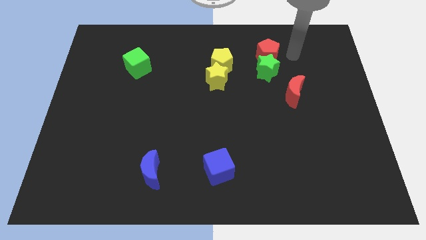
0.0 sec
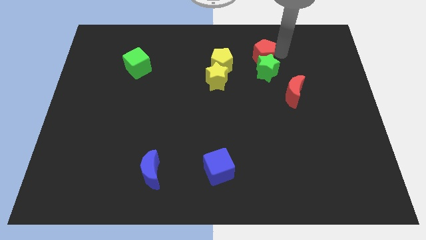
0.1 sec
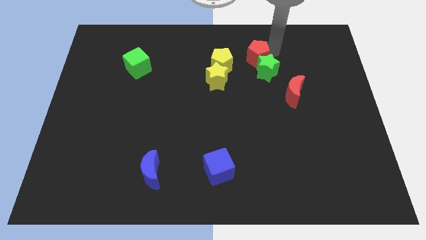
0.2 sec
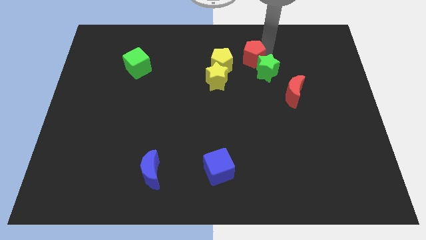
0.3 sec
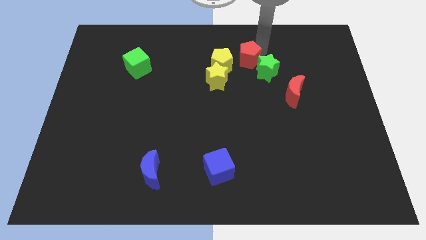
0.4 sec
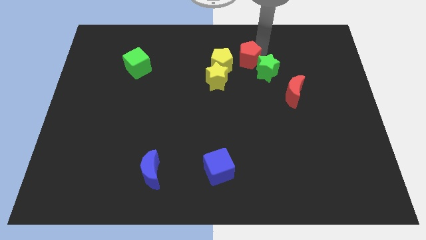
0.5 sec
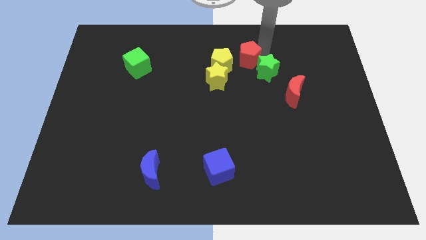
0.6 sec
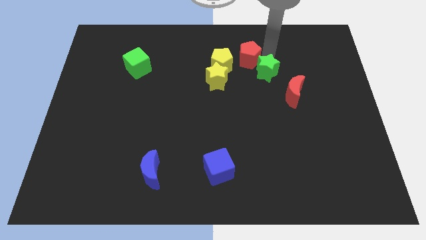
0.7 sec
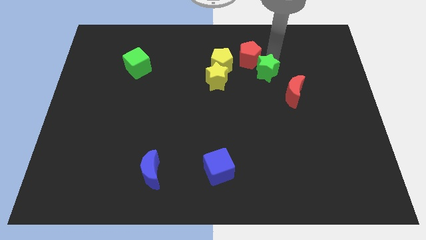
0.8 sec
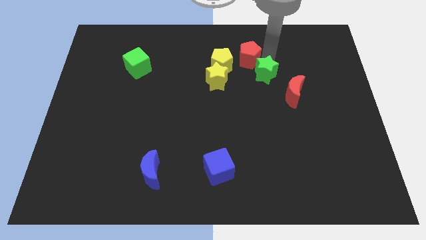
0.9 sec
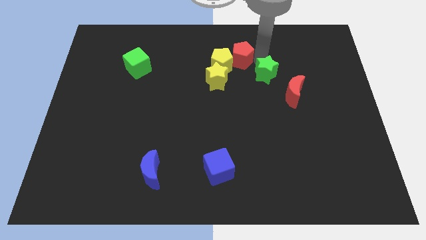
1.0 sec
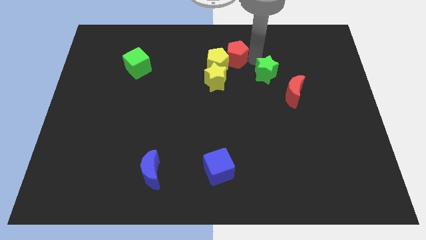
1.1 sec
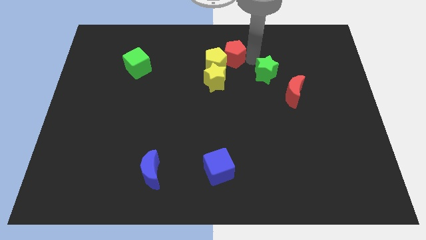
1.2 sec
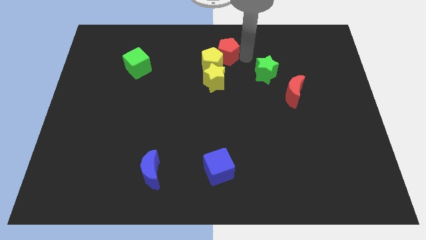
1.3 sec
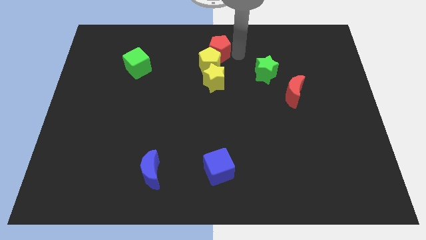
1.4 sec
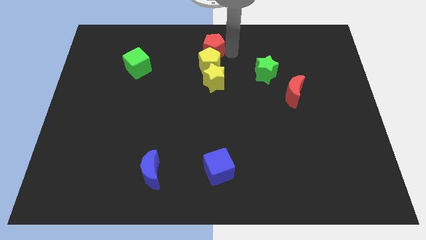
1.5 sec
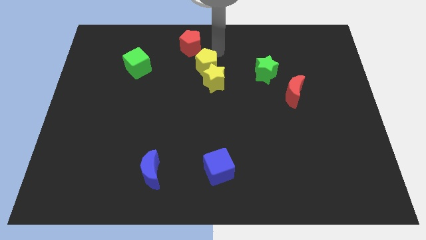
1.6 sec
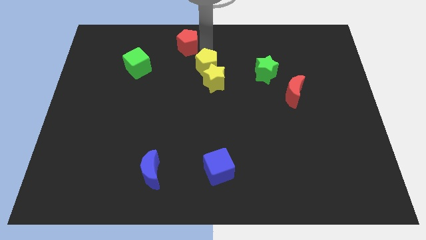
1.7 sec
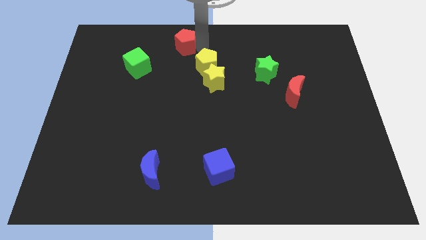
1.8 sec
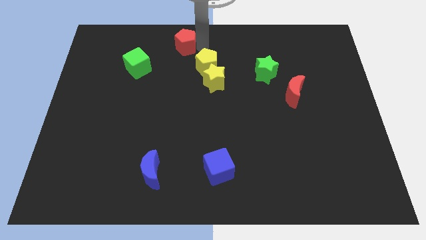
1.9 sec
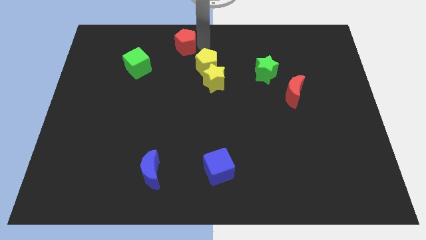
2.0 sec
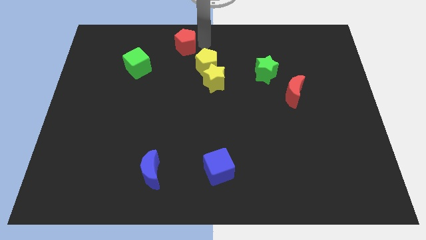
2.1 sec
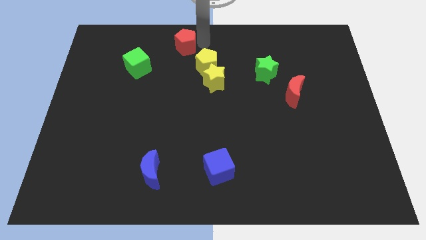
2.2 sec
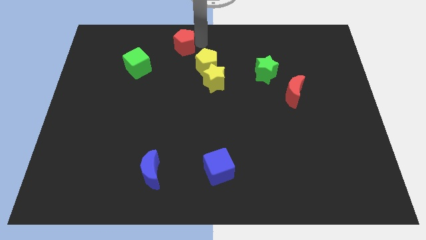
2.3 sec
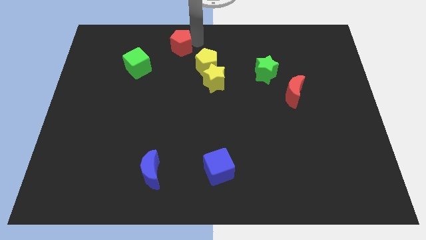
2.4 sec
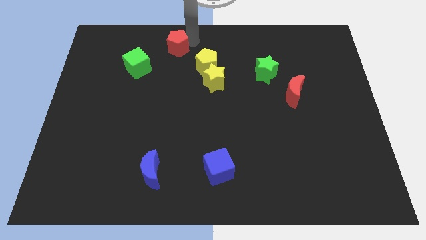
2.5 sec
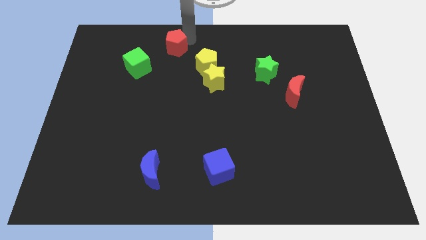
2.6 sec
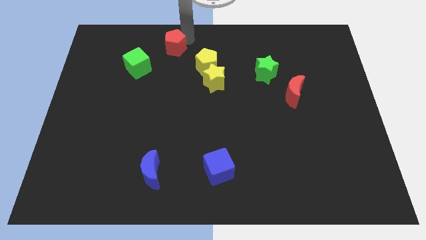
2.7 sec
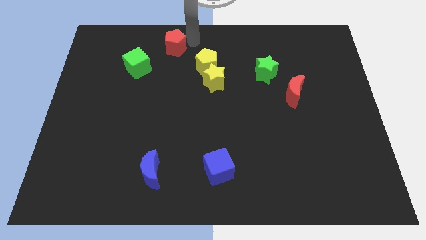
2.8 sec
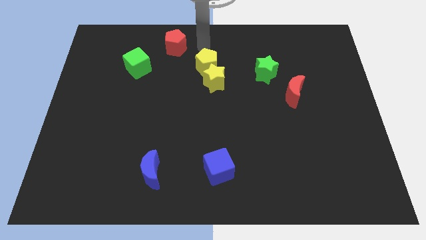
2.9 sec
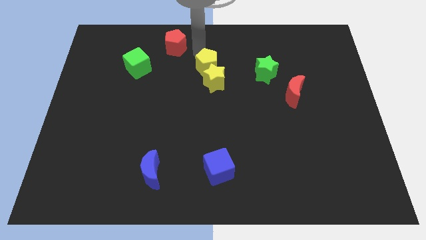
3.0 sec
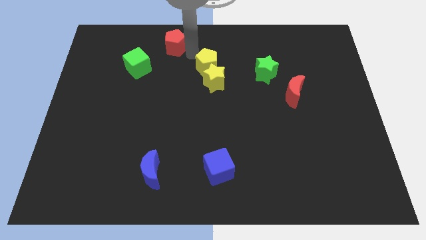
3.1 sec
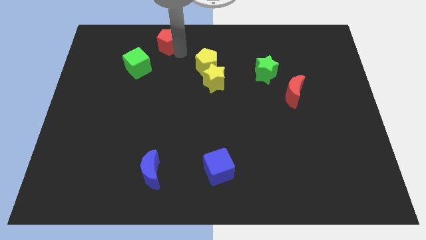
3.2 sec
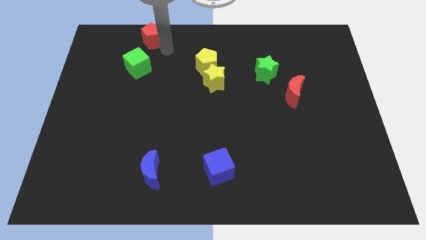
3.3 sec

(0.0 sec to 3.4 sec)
move the red pentagon to the top right of the green cube

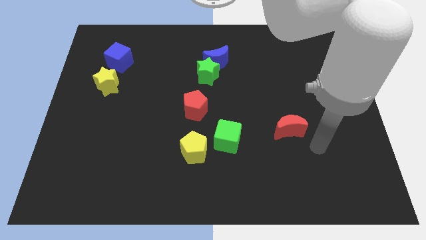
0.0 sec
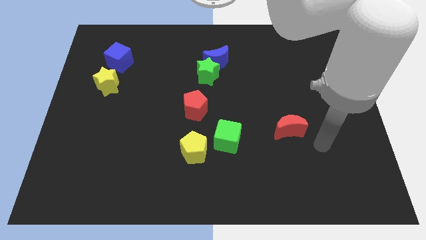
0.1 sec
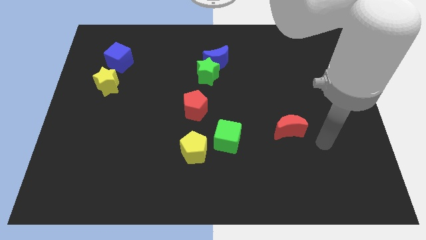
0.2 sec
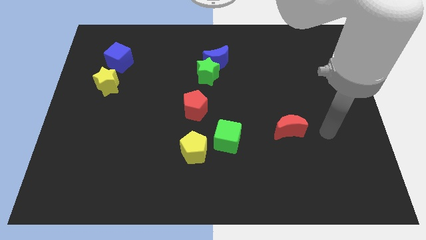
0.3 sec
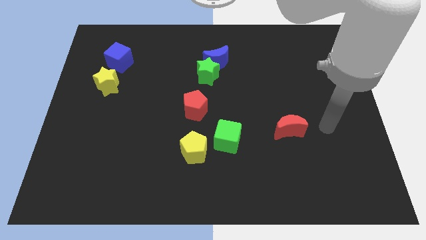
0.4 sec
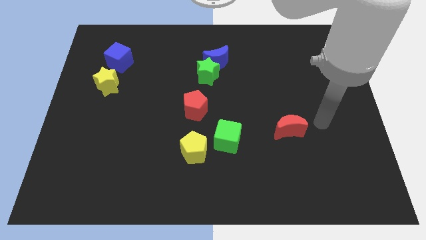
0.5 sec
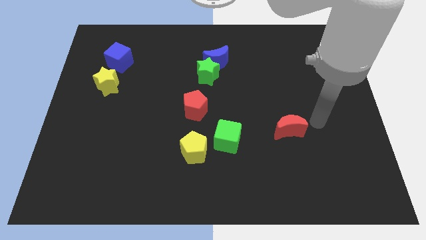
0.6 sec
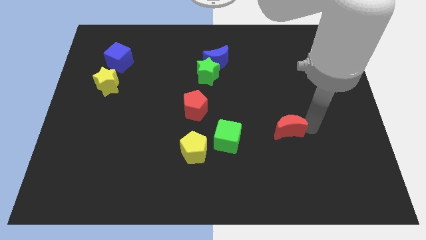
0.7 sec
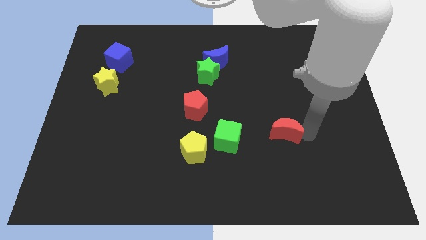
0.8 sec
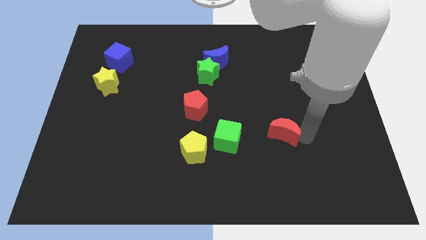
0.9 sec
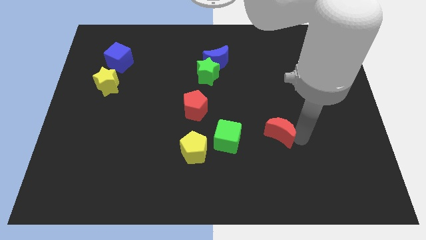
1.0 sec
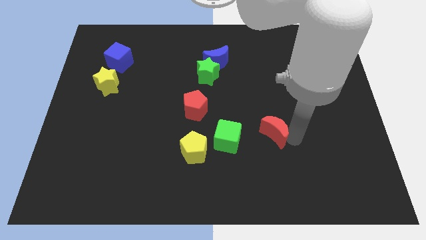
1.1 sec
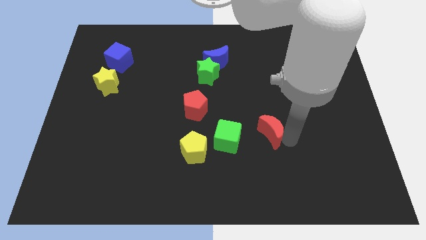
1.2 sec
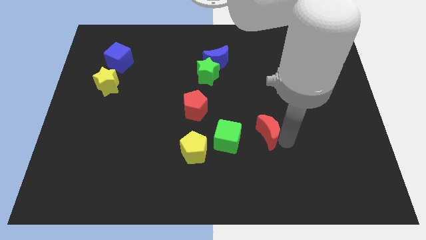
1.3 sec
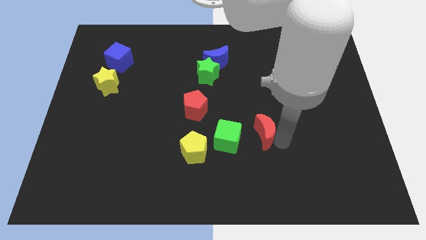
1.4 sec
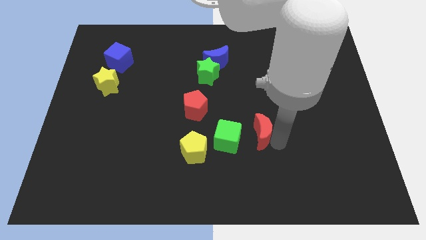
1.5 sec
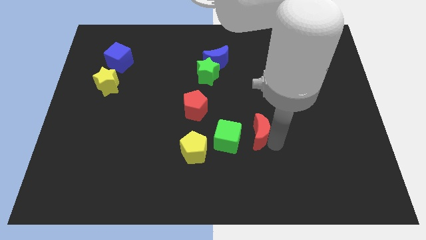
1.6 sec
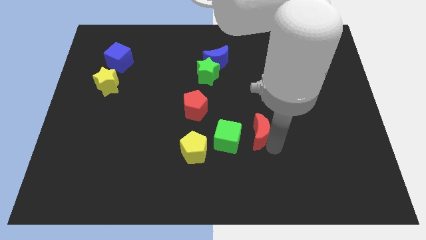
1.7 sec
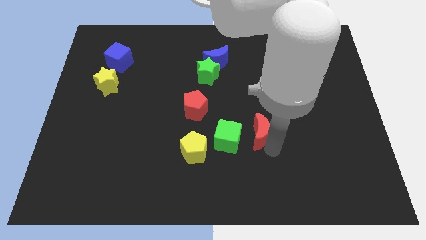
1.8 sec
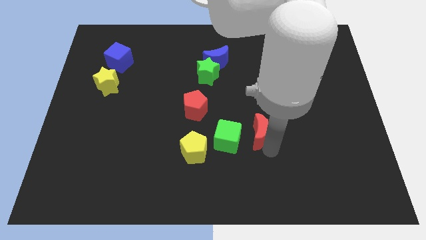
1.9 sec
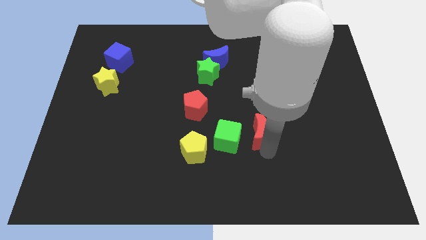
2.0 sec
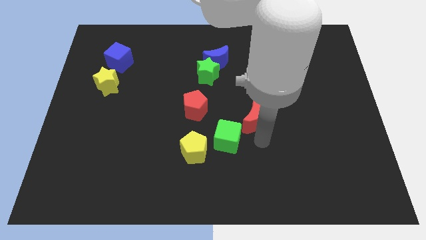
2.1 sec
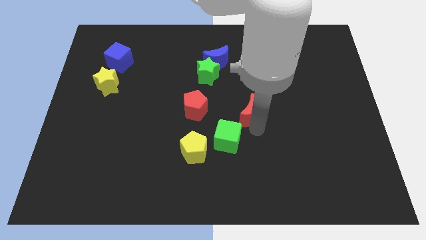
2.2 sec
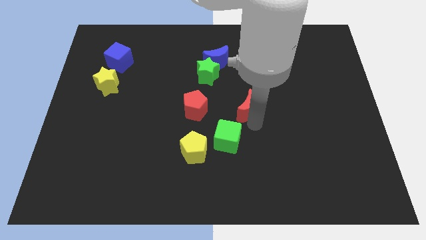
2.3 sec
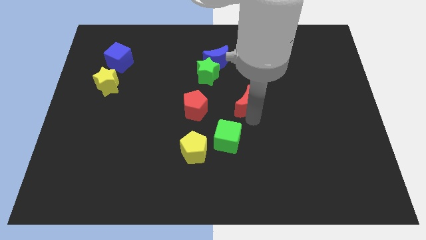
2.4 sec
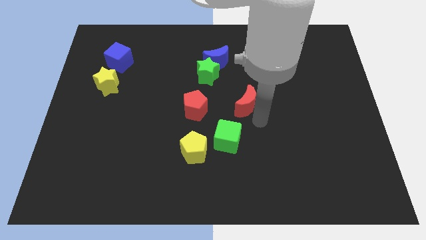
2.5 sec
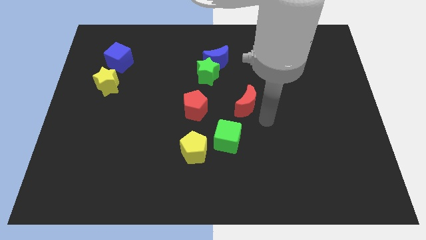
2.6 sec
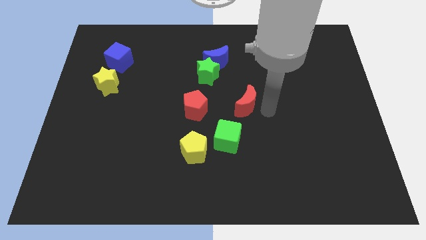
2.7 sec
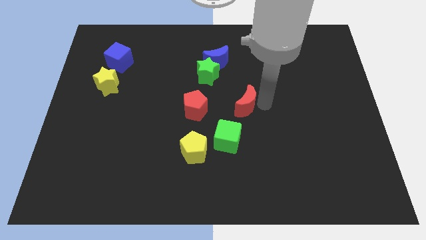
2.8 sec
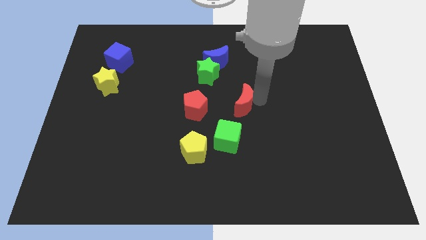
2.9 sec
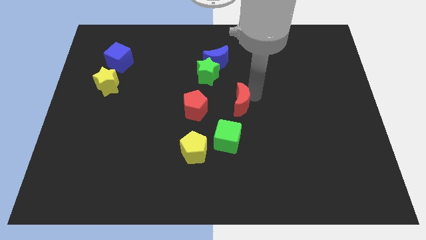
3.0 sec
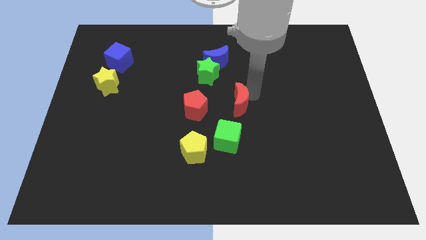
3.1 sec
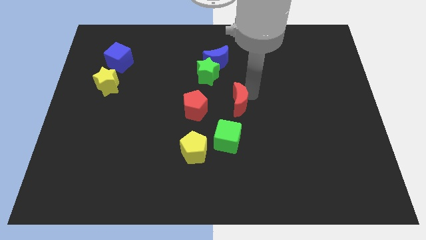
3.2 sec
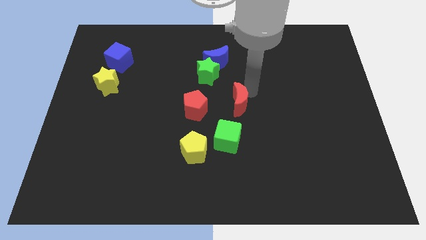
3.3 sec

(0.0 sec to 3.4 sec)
move the red crescent parallel right to the red pentagon

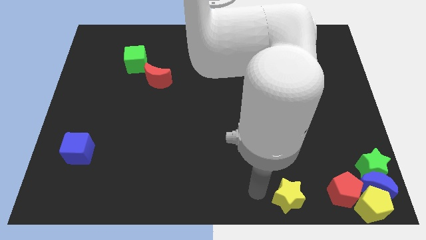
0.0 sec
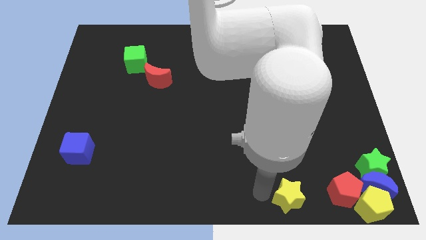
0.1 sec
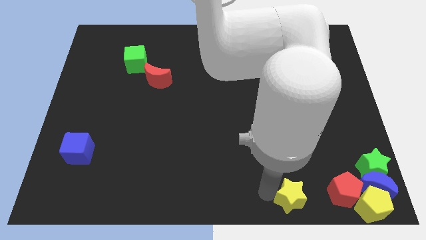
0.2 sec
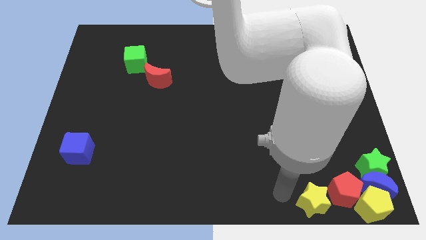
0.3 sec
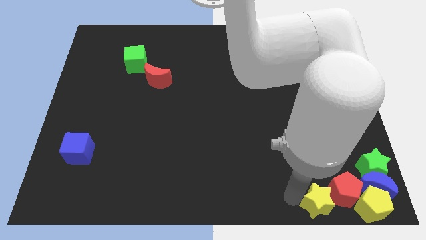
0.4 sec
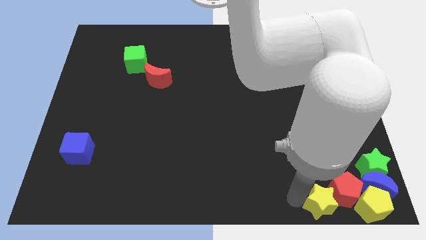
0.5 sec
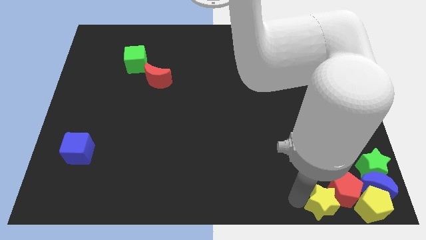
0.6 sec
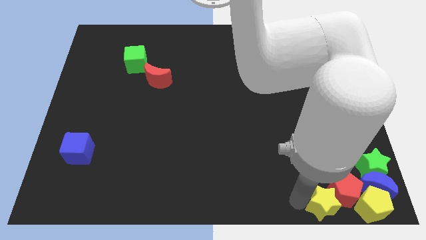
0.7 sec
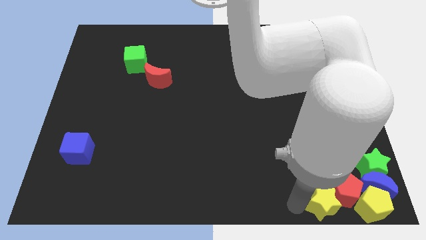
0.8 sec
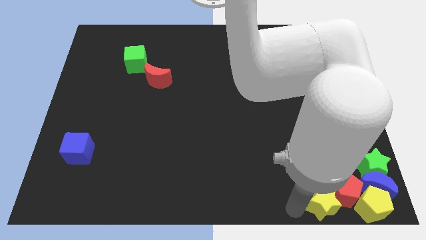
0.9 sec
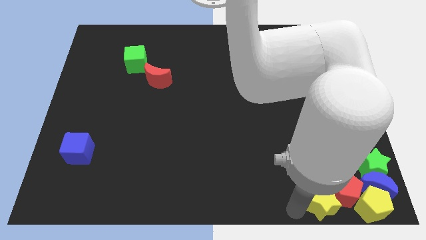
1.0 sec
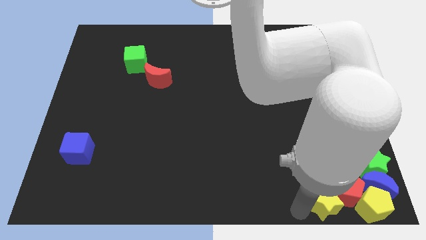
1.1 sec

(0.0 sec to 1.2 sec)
push the yellow star towards the red pentagon

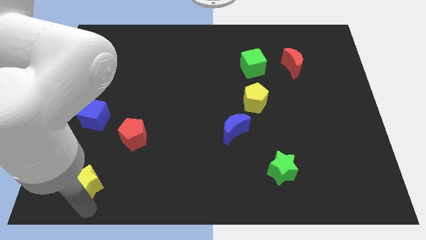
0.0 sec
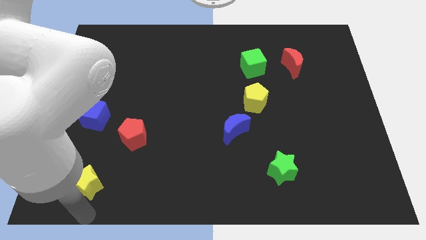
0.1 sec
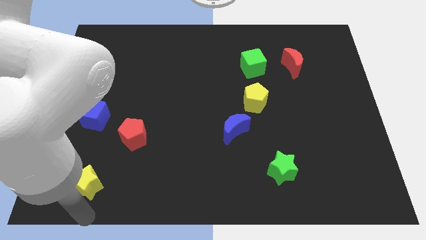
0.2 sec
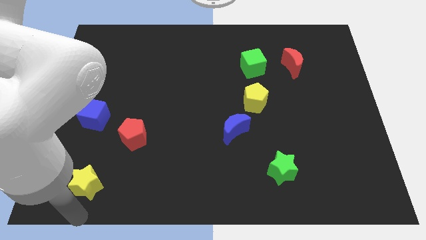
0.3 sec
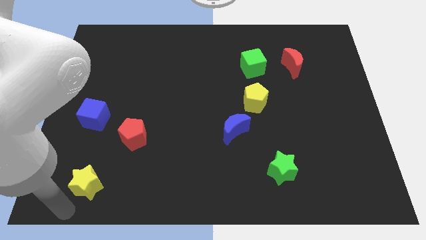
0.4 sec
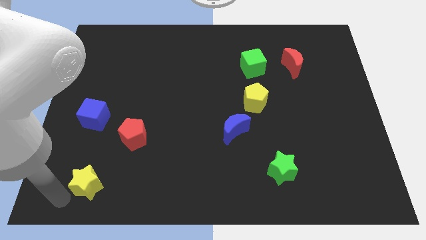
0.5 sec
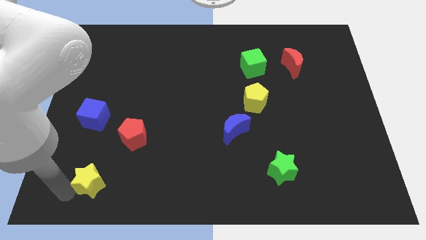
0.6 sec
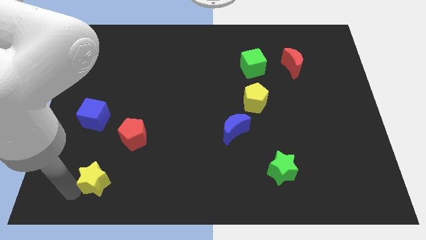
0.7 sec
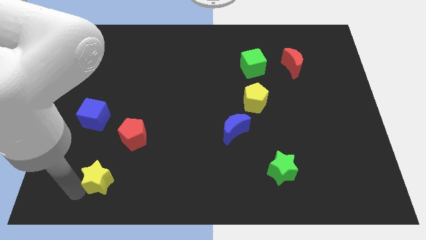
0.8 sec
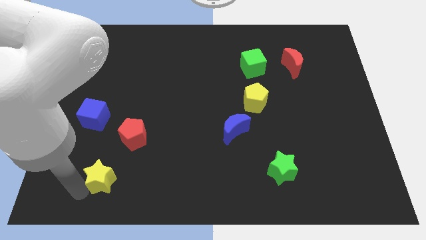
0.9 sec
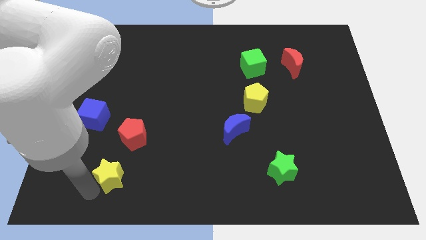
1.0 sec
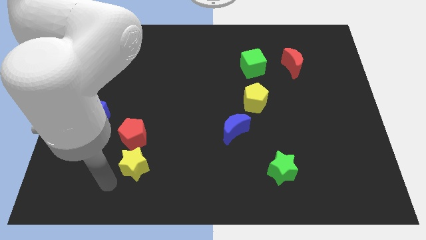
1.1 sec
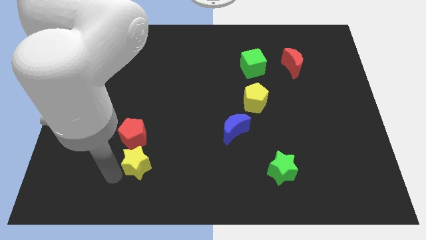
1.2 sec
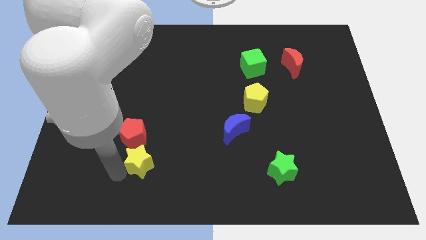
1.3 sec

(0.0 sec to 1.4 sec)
push the yellow star below the red pentagon
